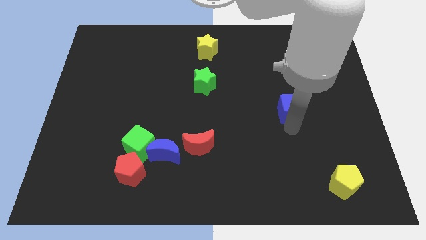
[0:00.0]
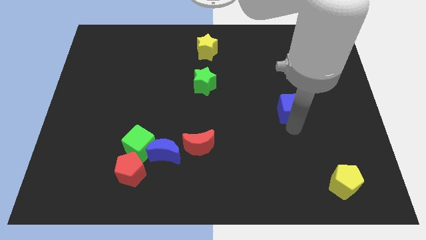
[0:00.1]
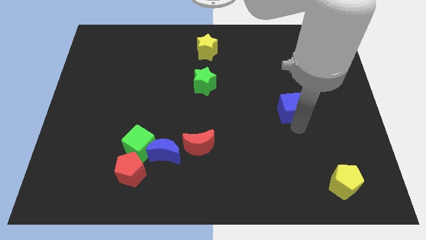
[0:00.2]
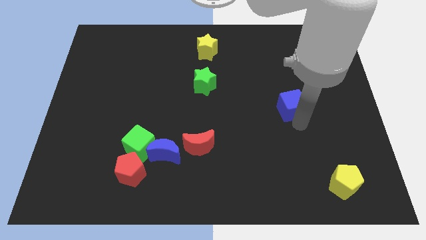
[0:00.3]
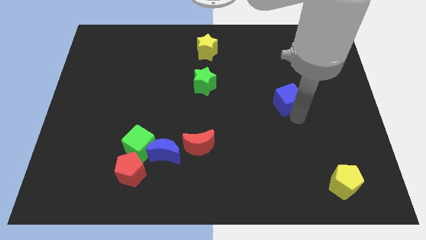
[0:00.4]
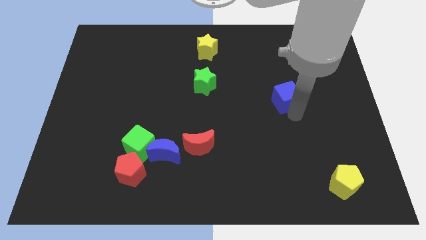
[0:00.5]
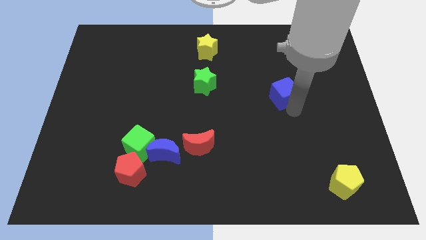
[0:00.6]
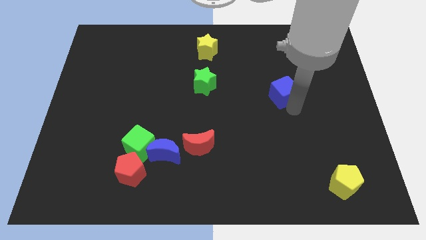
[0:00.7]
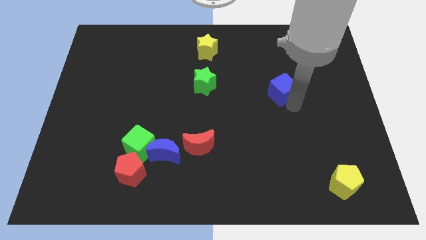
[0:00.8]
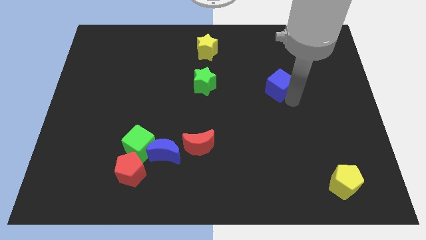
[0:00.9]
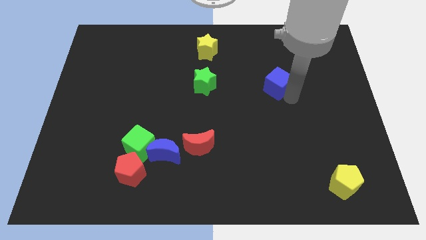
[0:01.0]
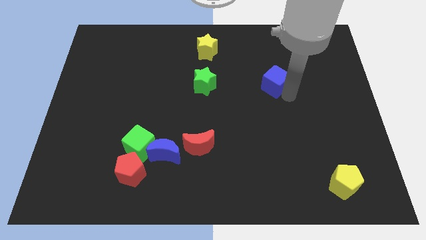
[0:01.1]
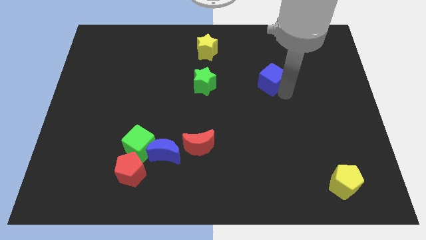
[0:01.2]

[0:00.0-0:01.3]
place blue cube to the right side of the green star

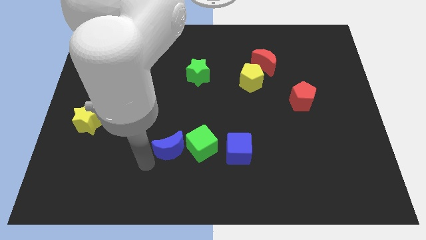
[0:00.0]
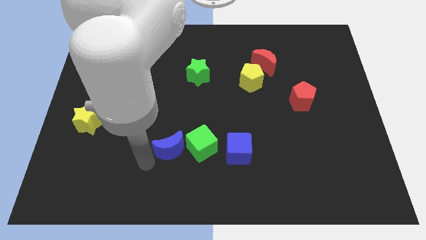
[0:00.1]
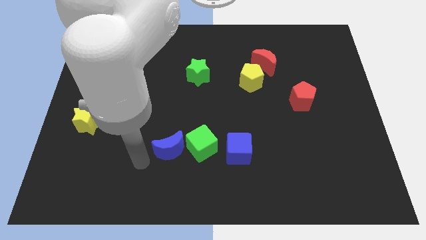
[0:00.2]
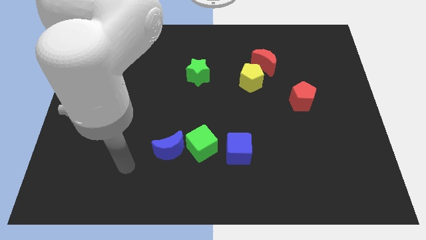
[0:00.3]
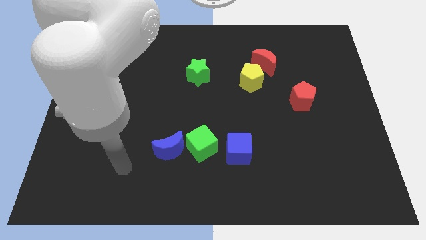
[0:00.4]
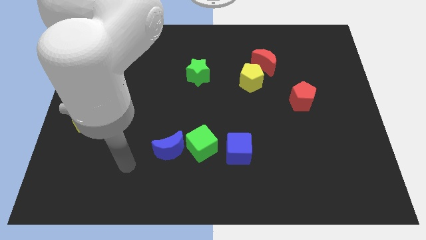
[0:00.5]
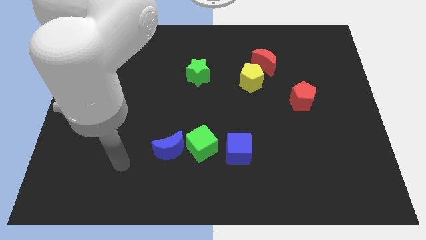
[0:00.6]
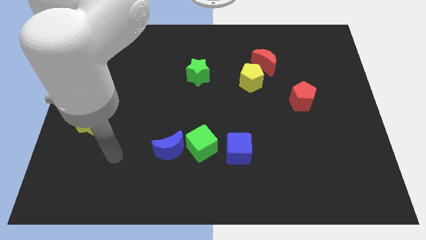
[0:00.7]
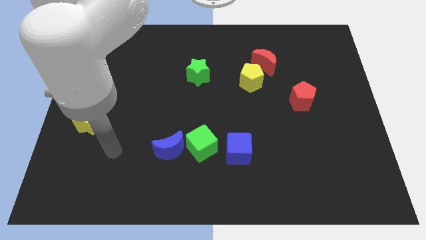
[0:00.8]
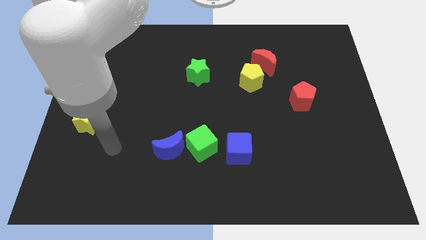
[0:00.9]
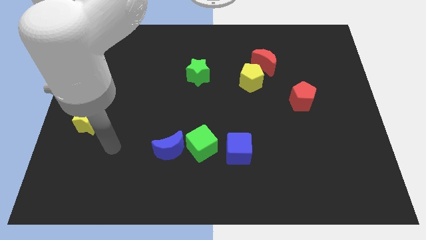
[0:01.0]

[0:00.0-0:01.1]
move your arm away from blue moon

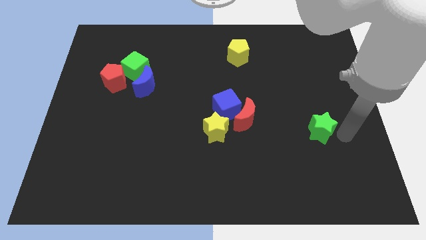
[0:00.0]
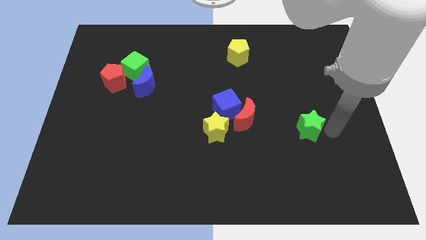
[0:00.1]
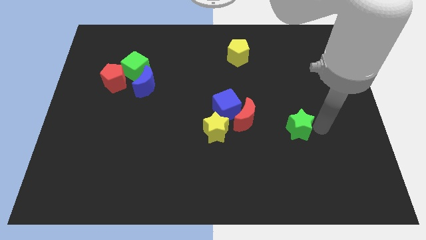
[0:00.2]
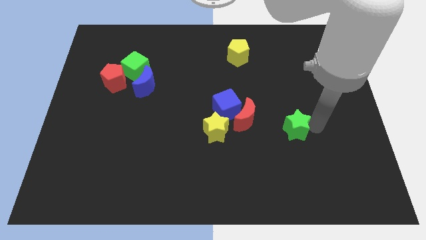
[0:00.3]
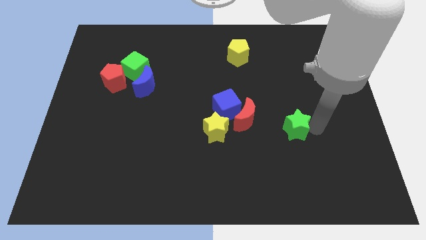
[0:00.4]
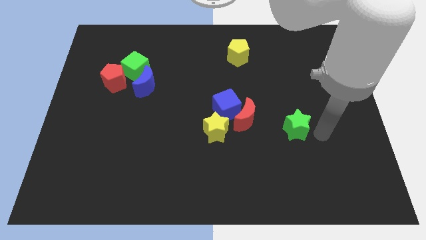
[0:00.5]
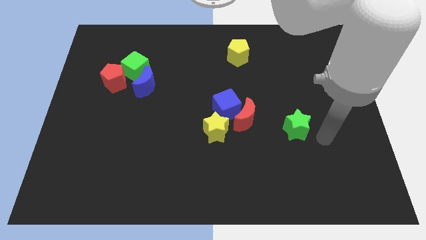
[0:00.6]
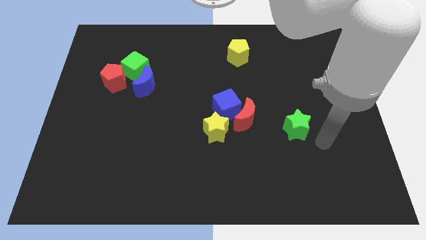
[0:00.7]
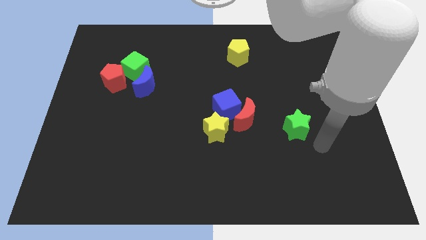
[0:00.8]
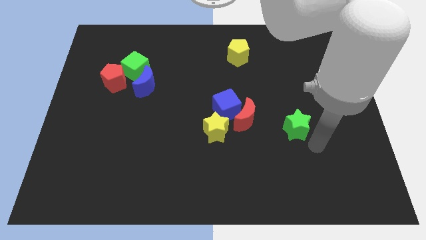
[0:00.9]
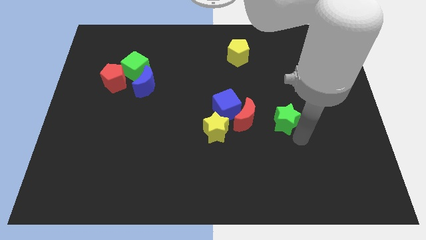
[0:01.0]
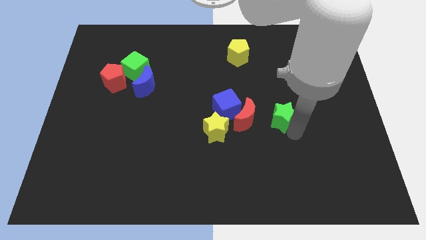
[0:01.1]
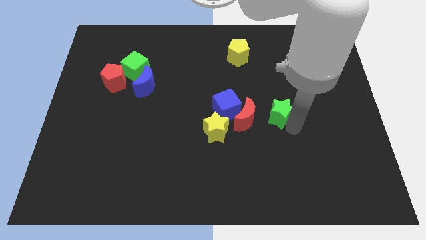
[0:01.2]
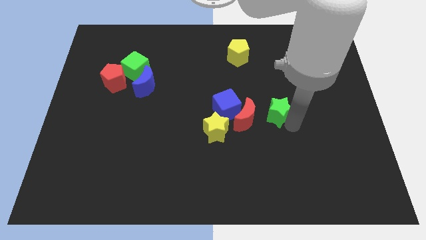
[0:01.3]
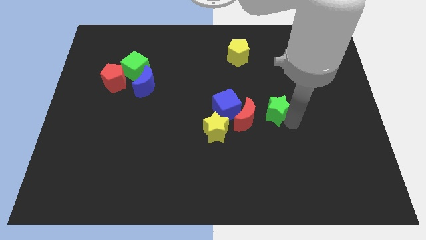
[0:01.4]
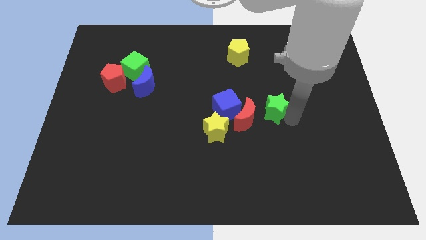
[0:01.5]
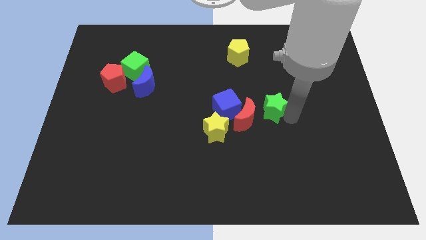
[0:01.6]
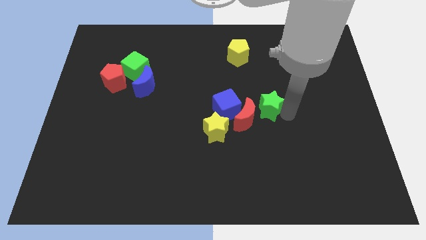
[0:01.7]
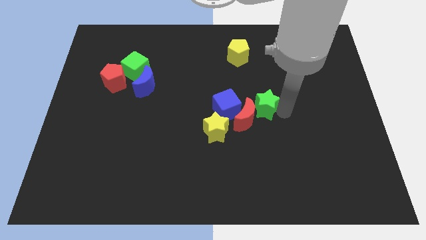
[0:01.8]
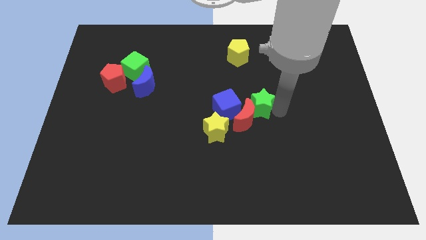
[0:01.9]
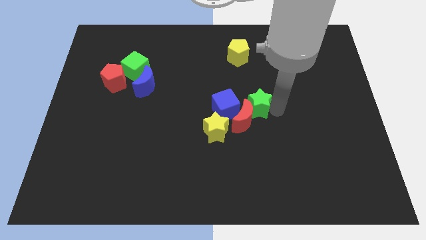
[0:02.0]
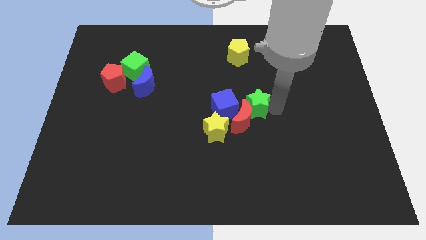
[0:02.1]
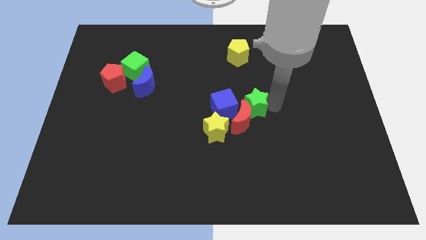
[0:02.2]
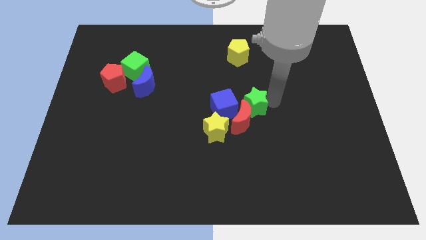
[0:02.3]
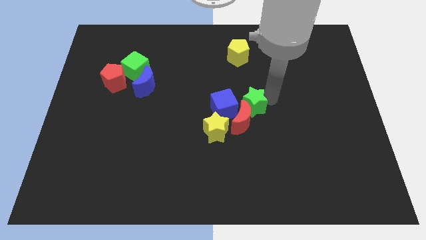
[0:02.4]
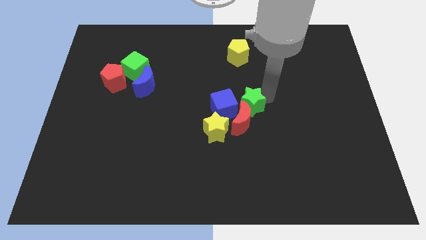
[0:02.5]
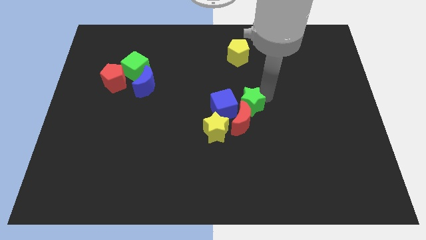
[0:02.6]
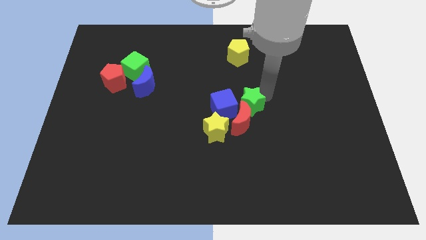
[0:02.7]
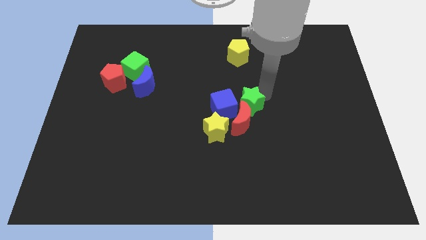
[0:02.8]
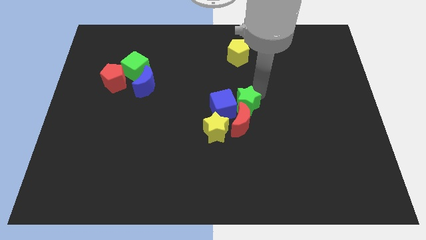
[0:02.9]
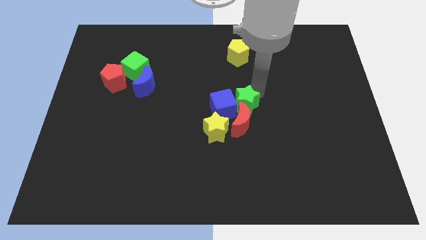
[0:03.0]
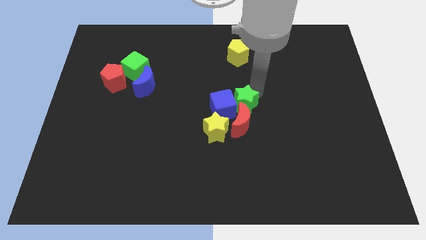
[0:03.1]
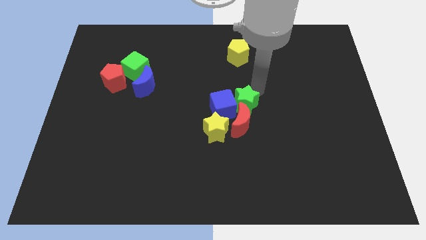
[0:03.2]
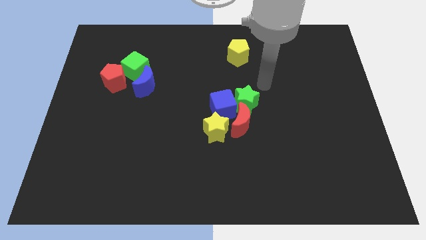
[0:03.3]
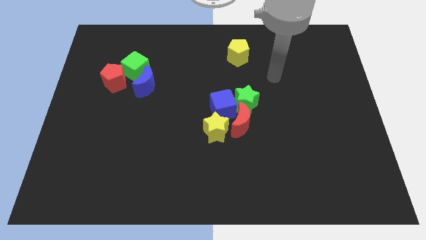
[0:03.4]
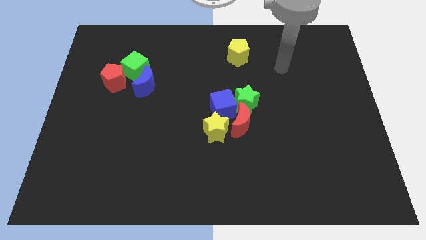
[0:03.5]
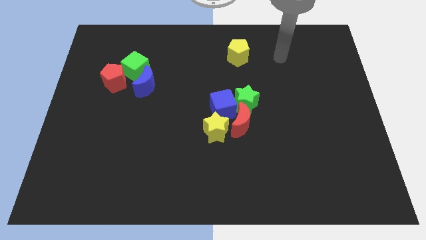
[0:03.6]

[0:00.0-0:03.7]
place green star to the right of blue cube

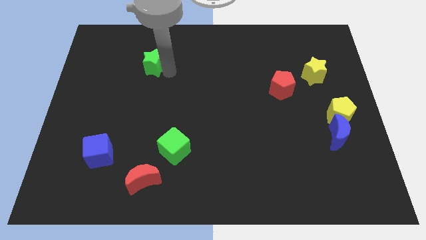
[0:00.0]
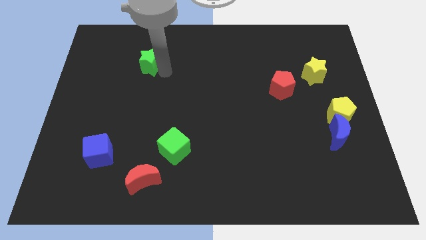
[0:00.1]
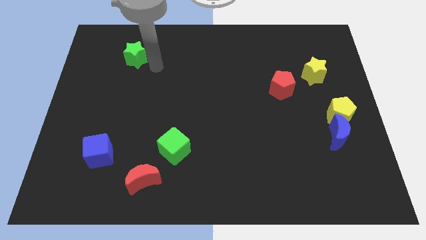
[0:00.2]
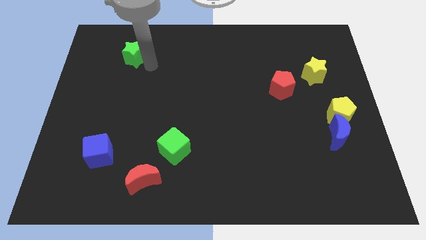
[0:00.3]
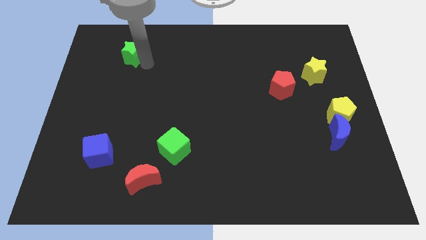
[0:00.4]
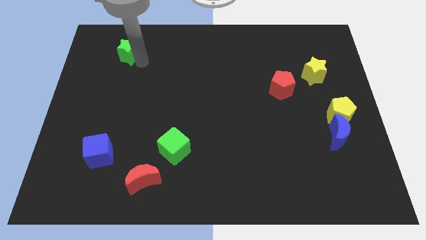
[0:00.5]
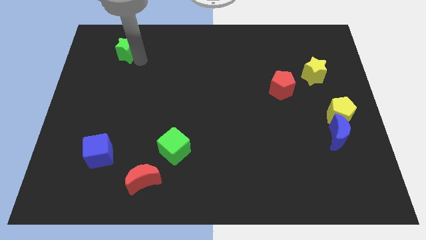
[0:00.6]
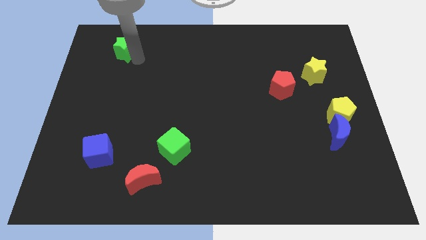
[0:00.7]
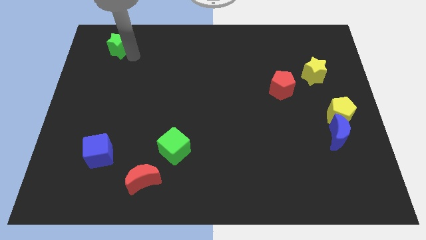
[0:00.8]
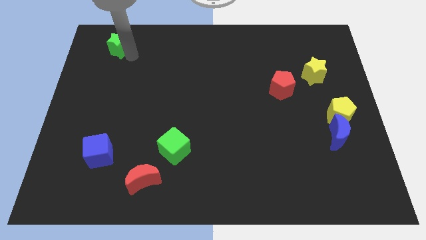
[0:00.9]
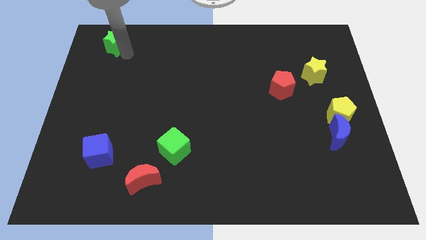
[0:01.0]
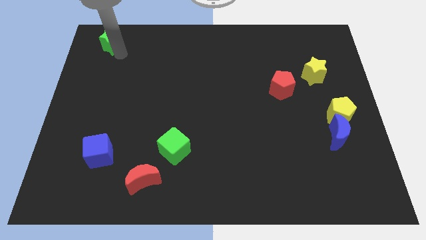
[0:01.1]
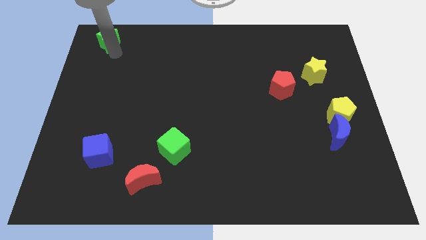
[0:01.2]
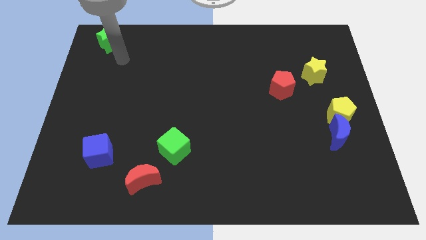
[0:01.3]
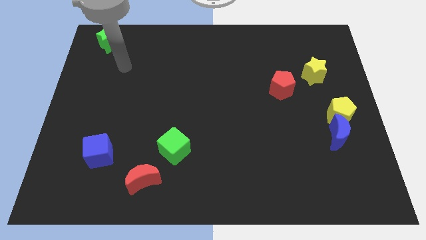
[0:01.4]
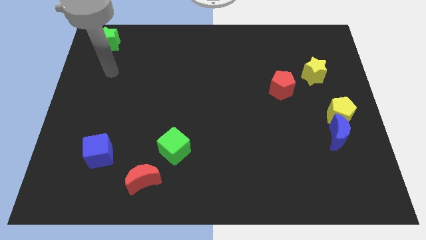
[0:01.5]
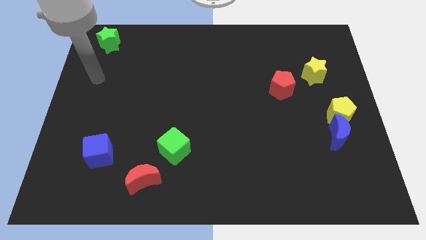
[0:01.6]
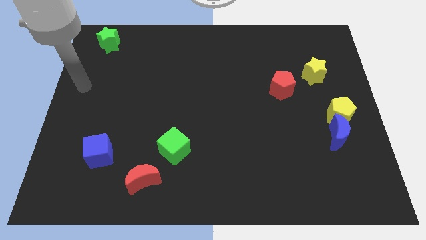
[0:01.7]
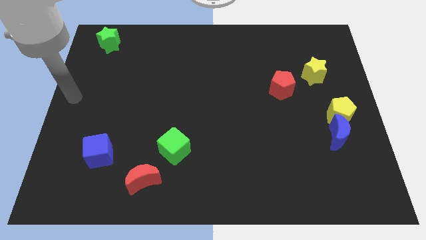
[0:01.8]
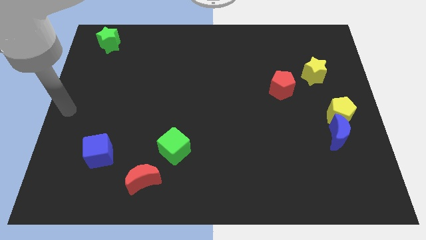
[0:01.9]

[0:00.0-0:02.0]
push the green star to the top left corner of the board

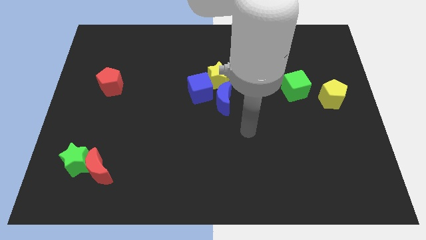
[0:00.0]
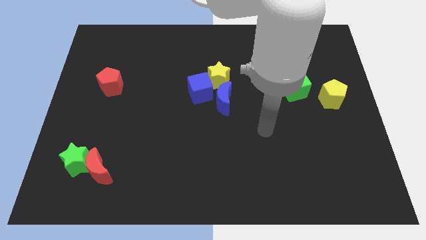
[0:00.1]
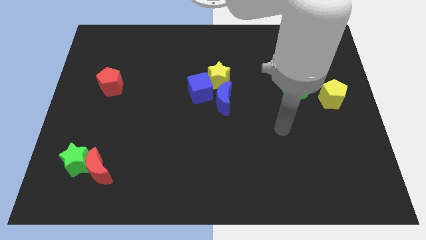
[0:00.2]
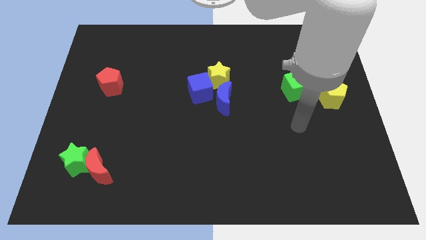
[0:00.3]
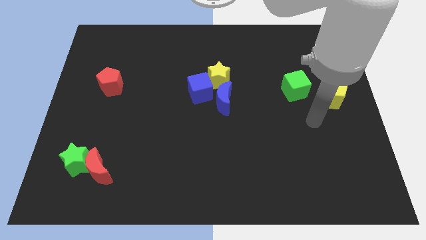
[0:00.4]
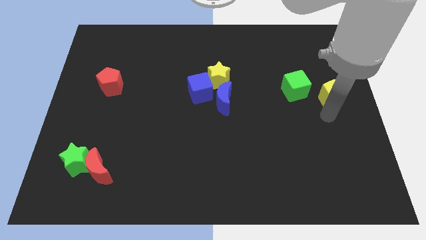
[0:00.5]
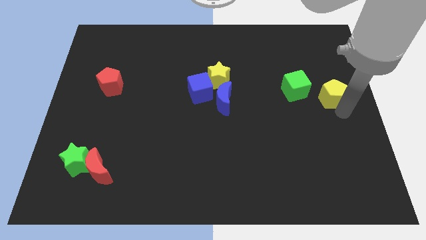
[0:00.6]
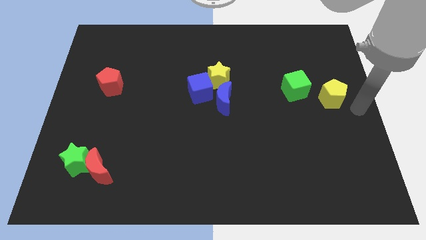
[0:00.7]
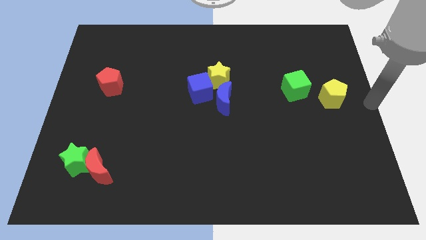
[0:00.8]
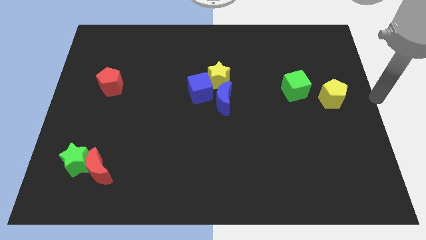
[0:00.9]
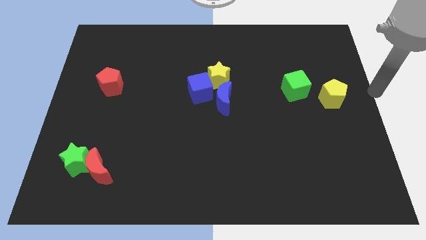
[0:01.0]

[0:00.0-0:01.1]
move your arm towards the center right of the board
